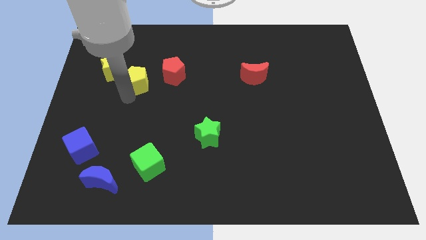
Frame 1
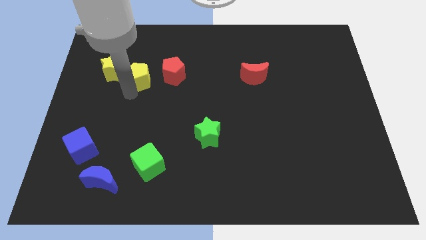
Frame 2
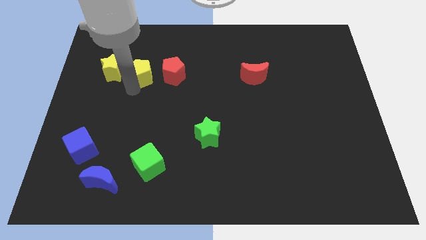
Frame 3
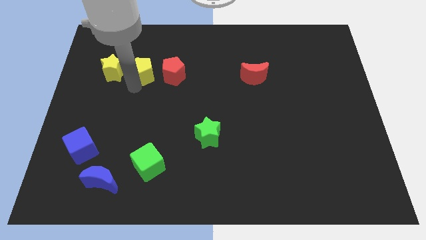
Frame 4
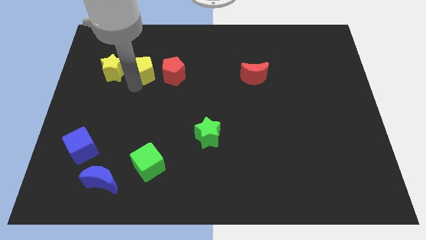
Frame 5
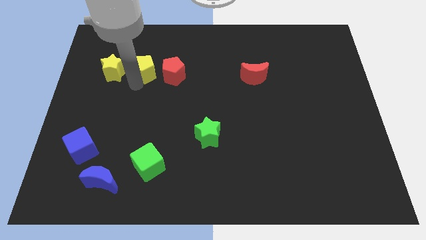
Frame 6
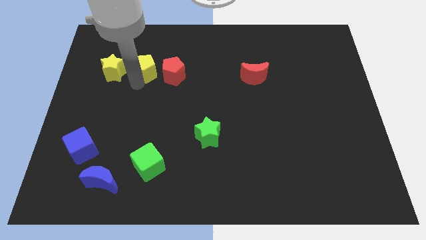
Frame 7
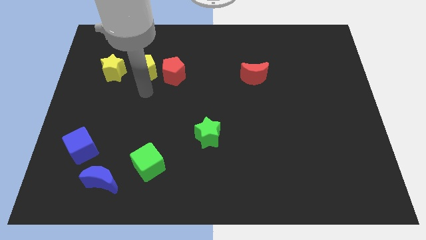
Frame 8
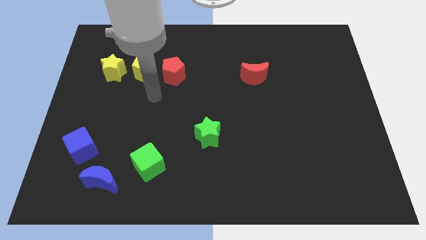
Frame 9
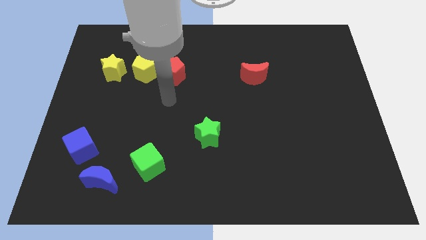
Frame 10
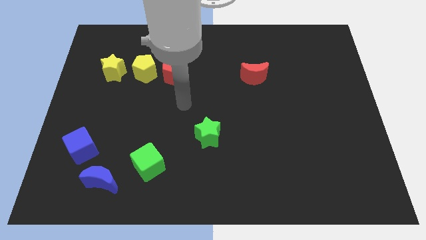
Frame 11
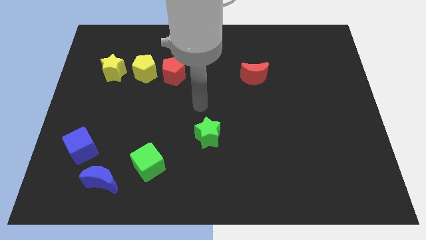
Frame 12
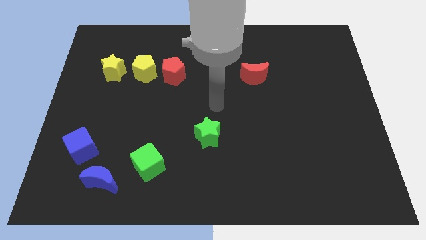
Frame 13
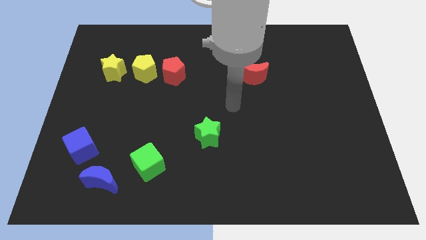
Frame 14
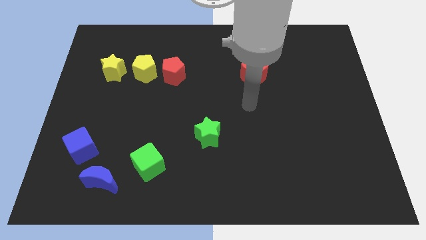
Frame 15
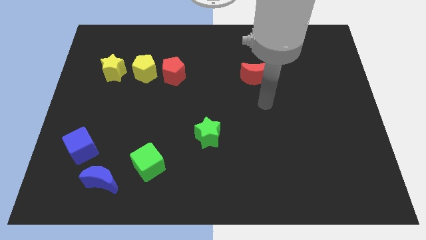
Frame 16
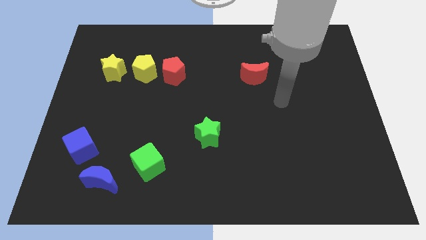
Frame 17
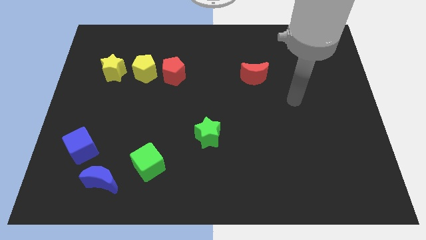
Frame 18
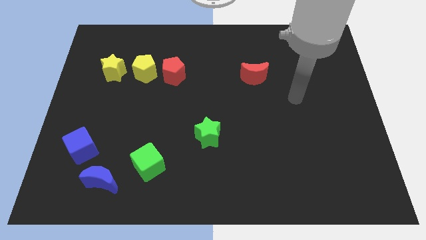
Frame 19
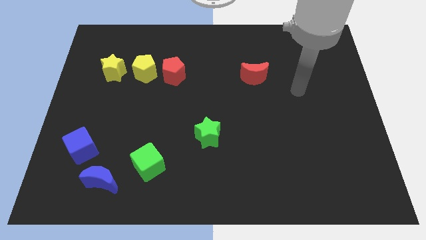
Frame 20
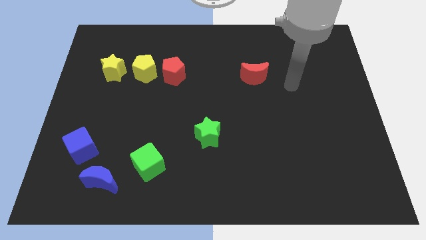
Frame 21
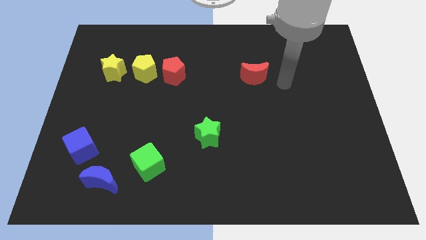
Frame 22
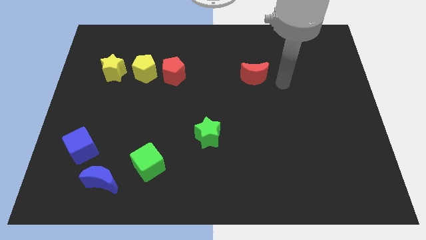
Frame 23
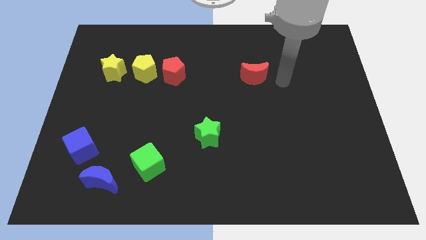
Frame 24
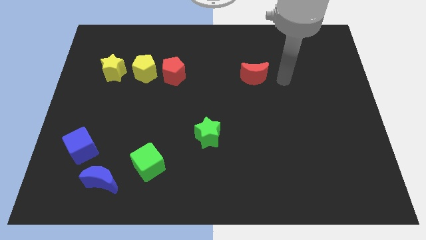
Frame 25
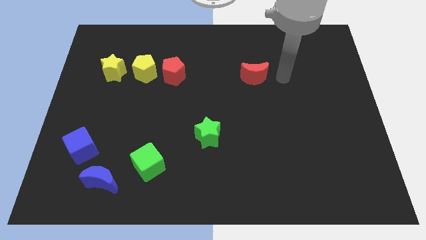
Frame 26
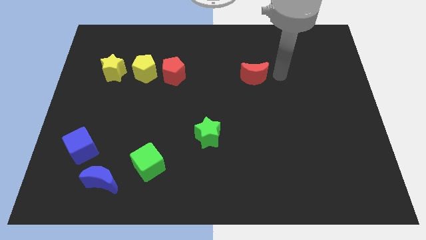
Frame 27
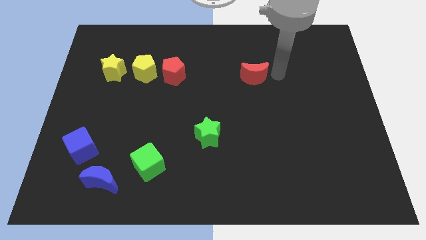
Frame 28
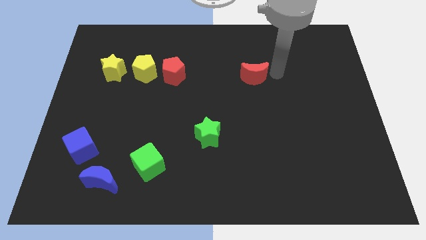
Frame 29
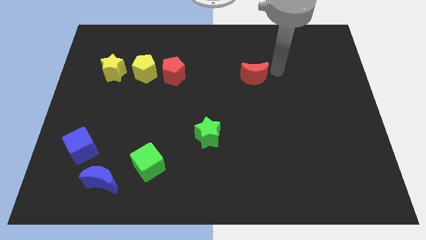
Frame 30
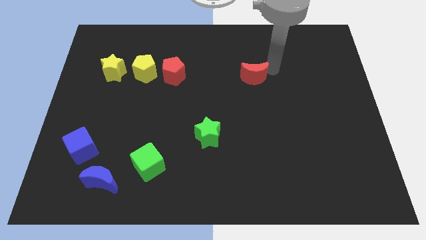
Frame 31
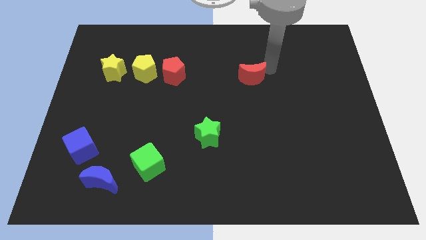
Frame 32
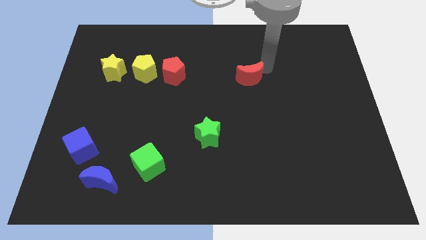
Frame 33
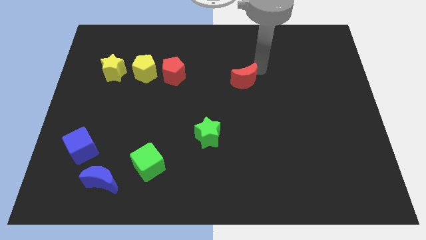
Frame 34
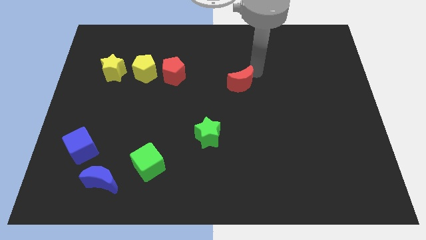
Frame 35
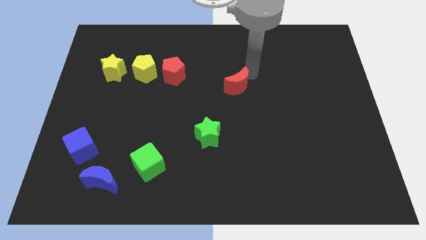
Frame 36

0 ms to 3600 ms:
place the yellow pentagon between the yellow star and red pentagon

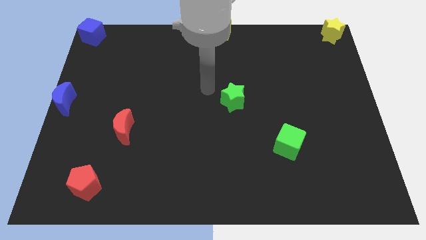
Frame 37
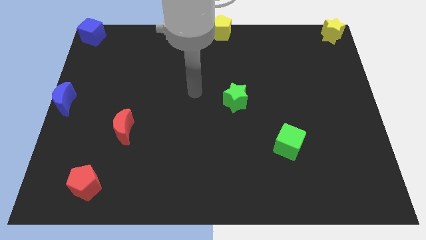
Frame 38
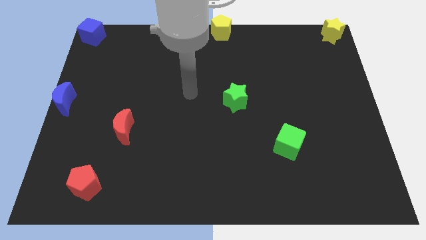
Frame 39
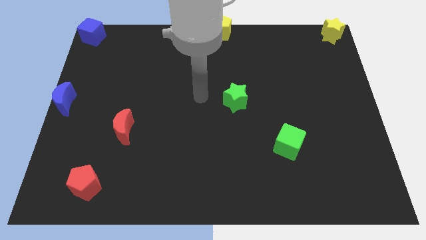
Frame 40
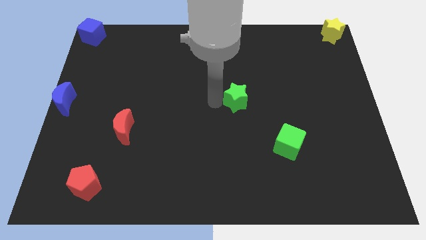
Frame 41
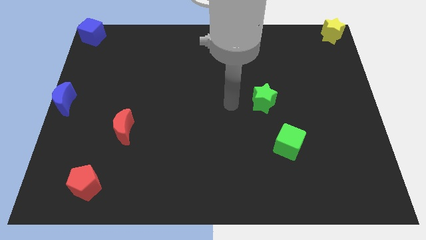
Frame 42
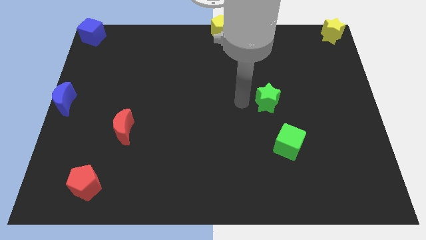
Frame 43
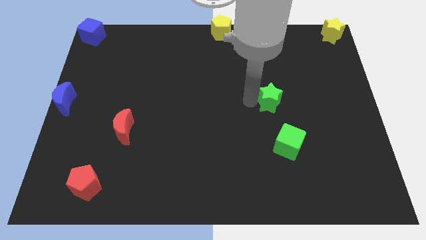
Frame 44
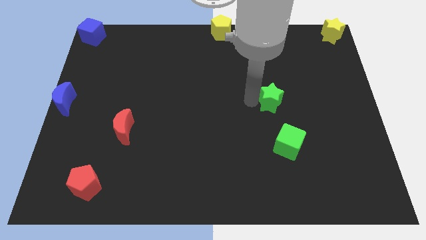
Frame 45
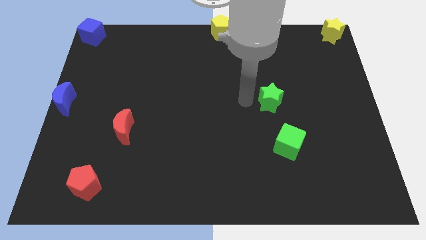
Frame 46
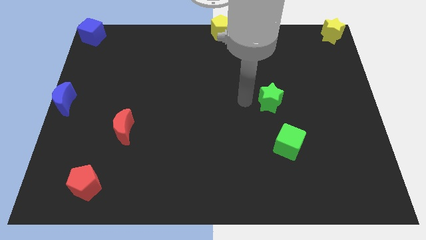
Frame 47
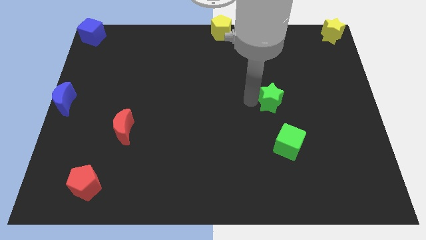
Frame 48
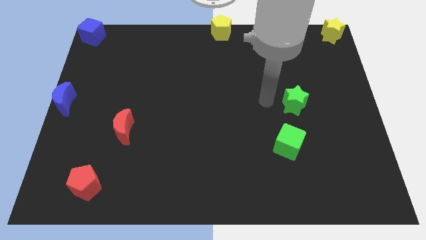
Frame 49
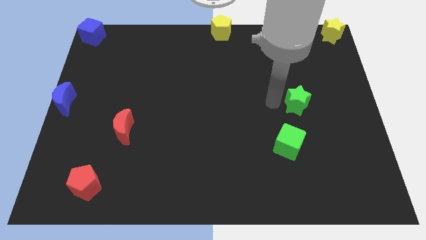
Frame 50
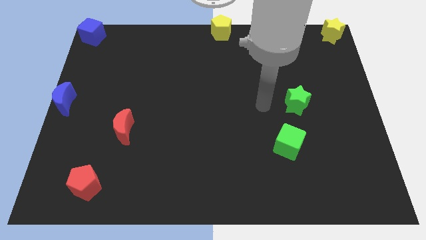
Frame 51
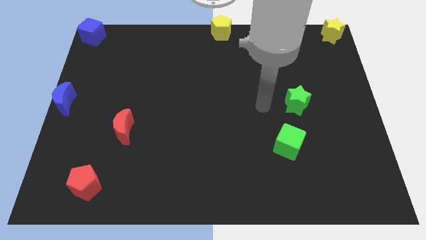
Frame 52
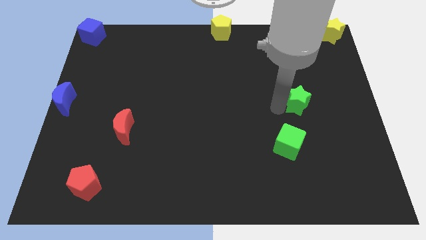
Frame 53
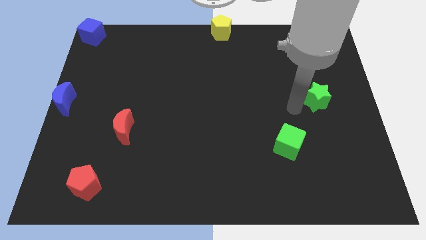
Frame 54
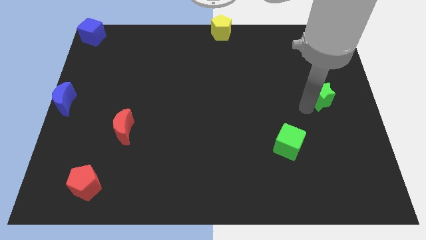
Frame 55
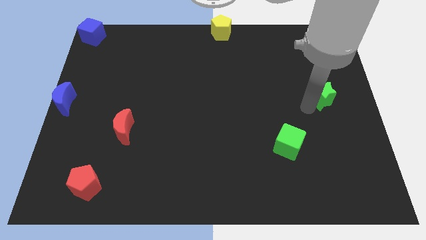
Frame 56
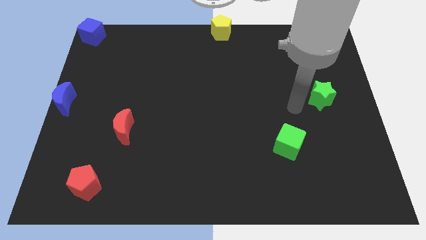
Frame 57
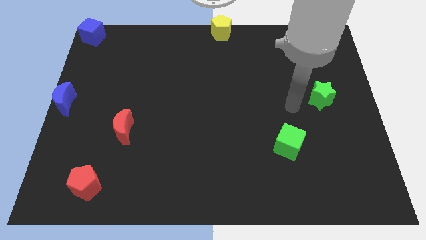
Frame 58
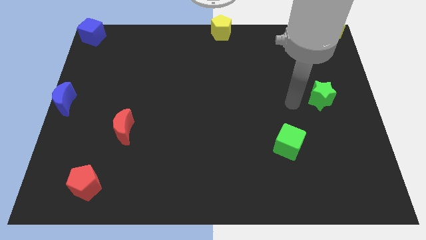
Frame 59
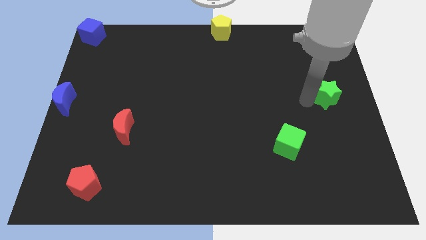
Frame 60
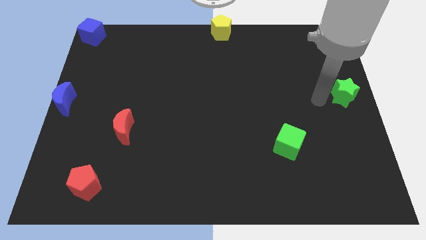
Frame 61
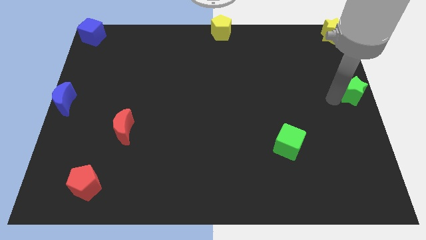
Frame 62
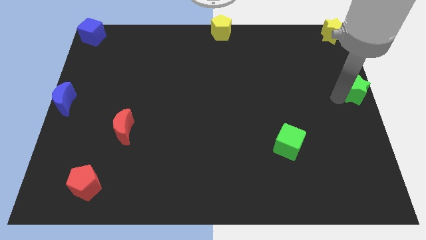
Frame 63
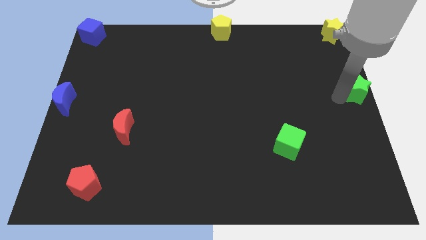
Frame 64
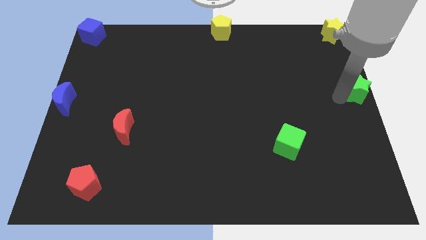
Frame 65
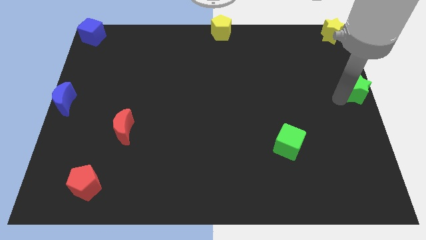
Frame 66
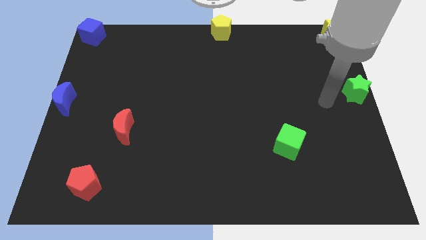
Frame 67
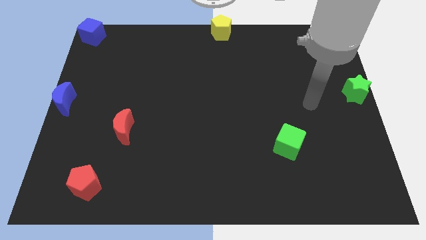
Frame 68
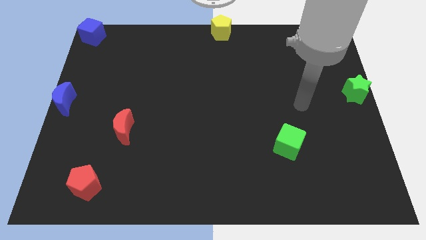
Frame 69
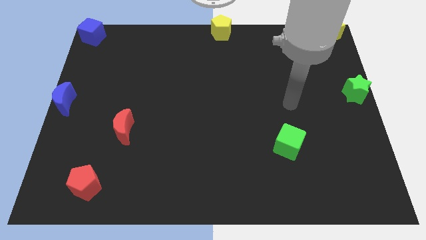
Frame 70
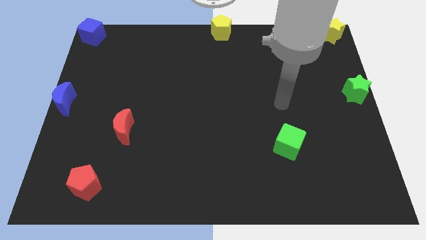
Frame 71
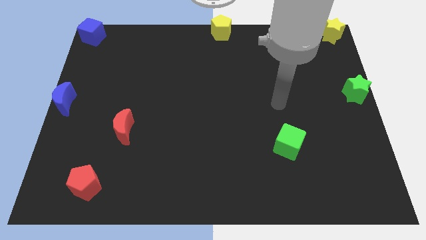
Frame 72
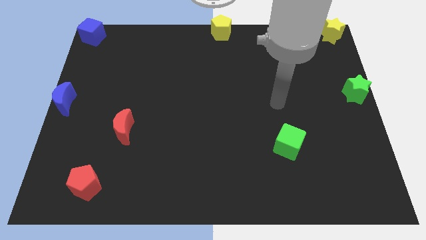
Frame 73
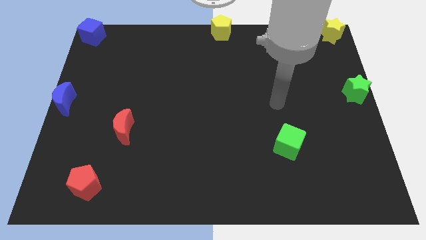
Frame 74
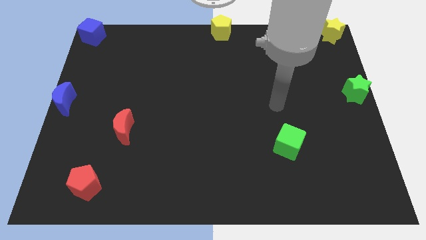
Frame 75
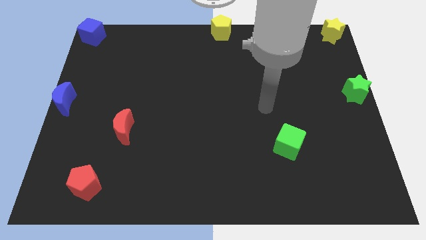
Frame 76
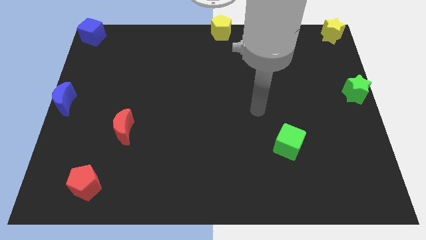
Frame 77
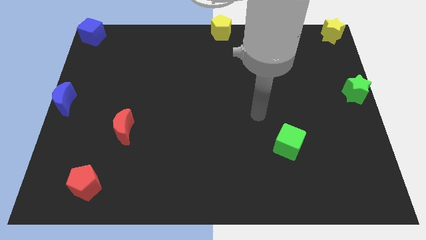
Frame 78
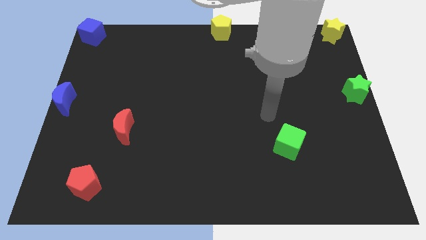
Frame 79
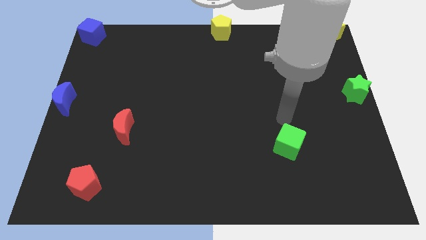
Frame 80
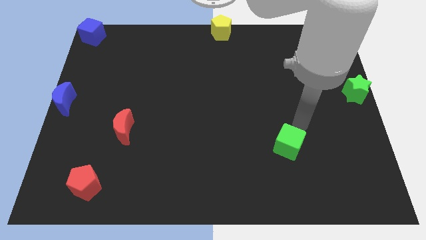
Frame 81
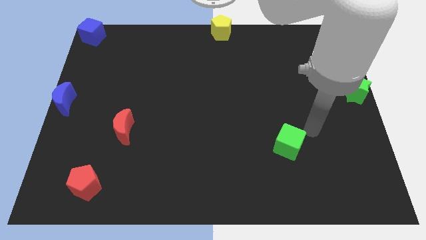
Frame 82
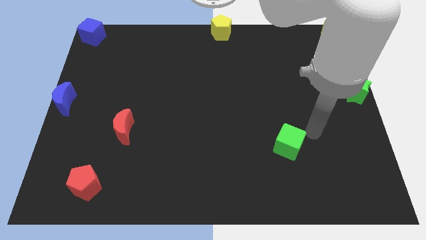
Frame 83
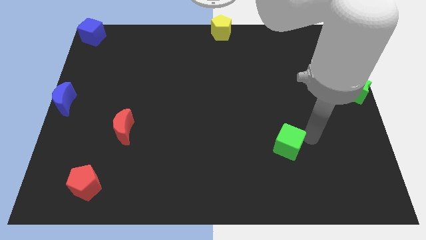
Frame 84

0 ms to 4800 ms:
drag the green star vertically below the yellow star

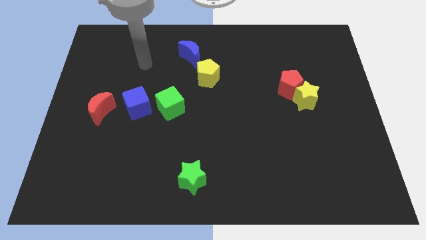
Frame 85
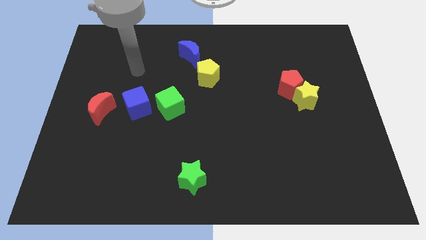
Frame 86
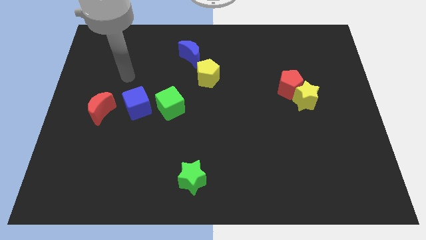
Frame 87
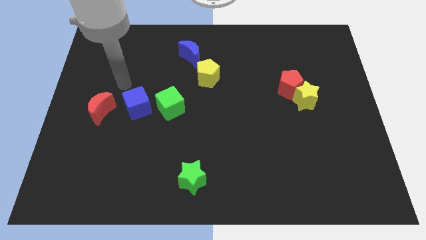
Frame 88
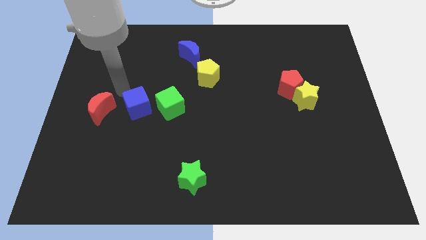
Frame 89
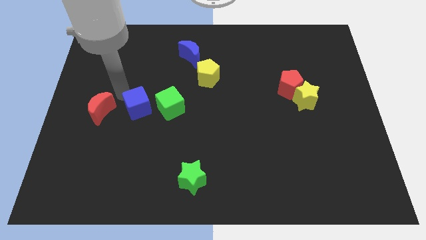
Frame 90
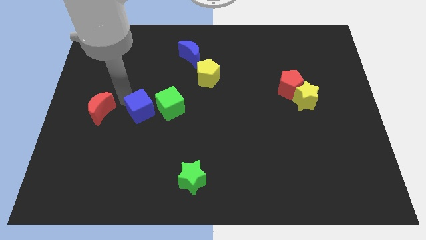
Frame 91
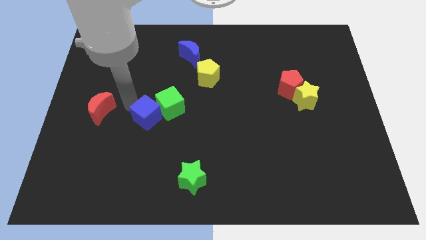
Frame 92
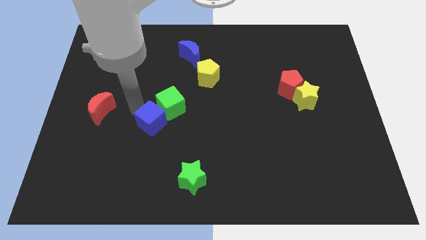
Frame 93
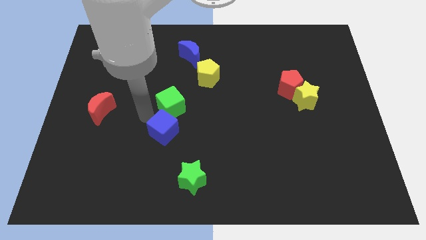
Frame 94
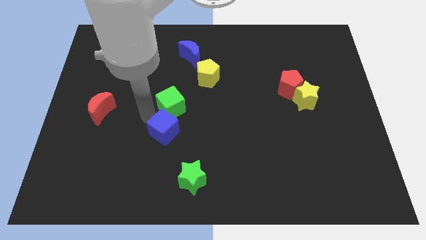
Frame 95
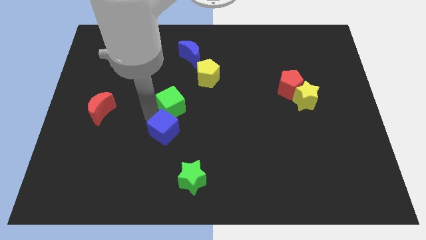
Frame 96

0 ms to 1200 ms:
push the blue cube below the green cube
